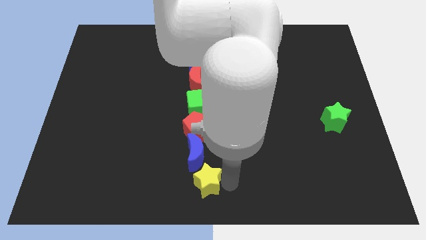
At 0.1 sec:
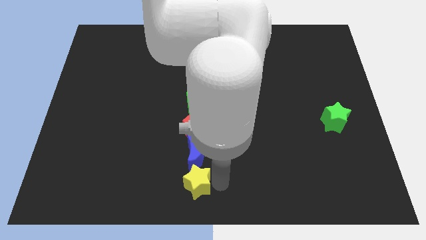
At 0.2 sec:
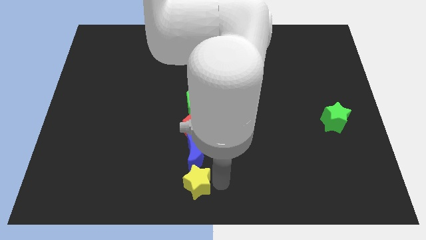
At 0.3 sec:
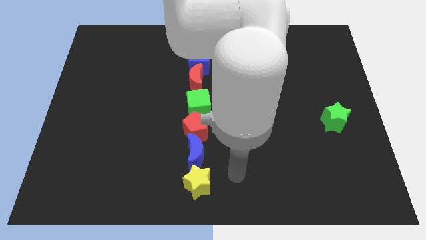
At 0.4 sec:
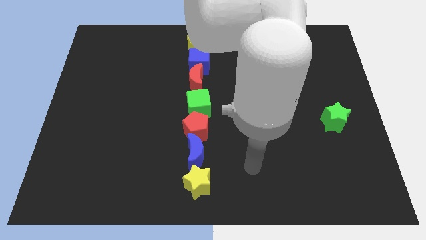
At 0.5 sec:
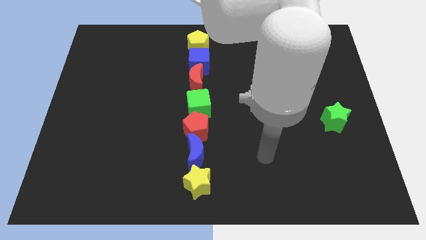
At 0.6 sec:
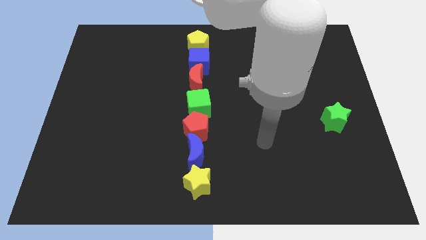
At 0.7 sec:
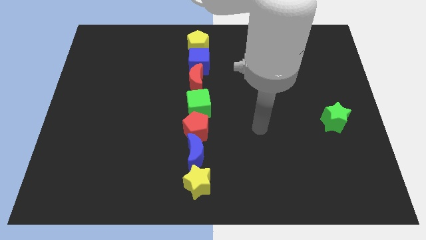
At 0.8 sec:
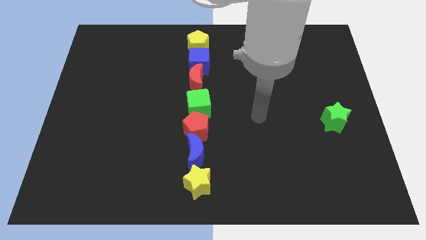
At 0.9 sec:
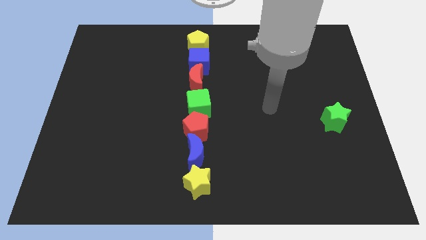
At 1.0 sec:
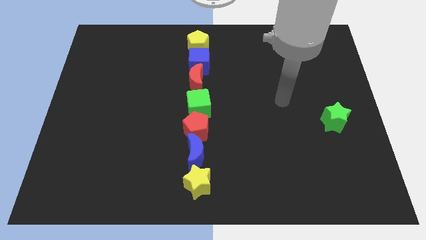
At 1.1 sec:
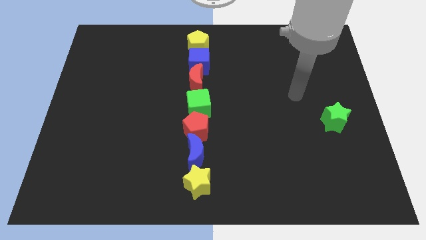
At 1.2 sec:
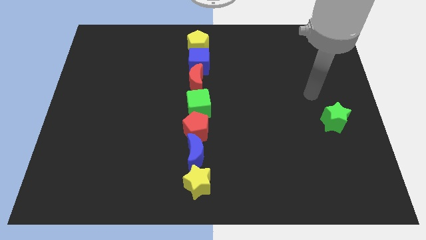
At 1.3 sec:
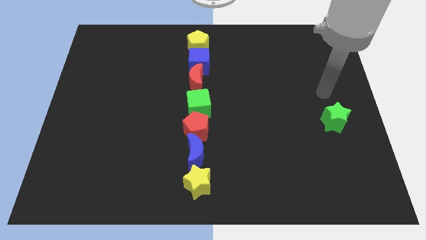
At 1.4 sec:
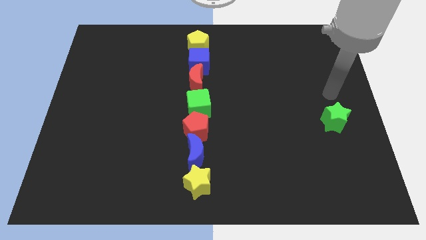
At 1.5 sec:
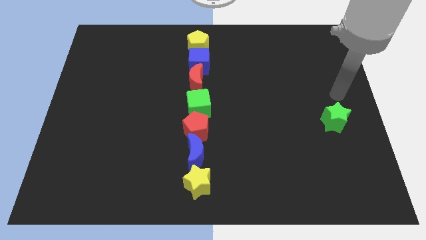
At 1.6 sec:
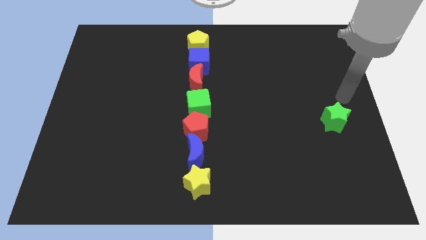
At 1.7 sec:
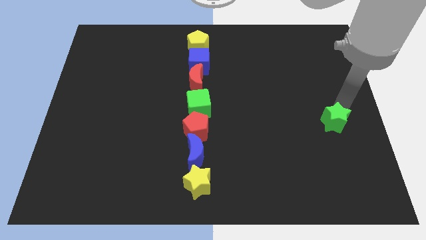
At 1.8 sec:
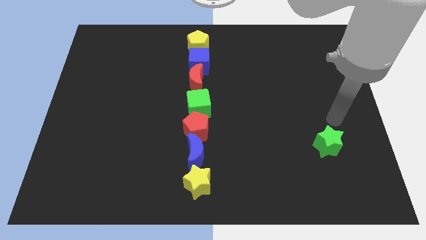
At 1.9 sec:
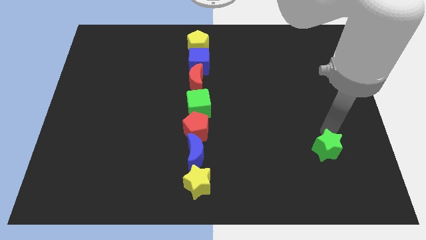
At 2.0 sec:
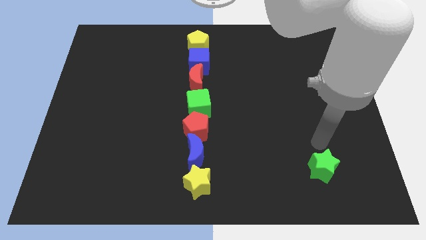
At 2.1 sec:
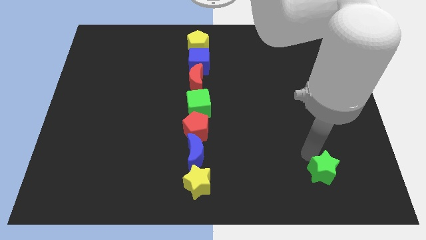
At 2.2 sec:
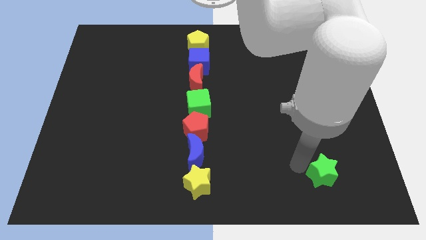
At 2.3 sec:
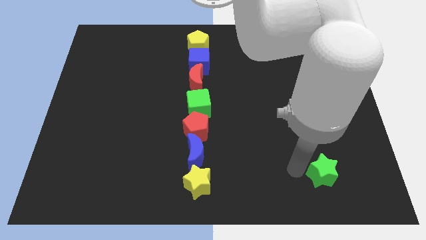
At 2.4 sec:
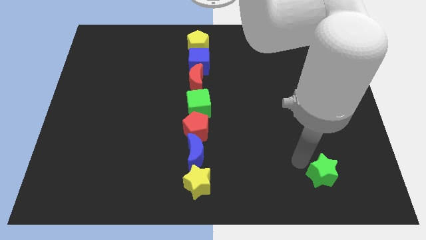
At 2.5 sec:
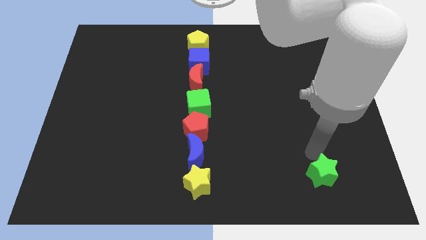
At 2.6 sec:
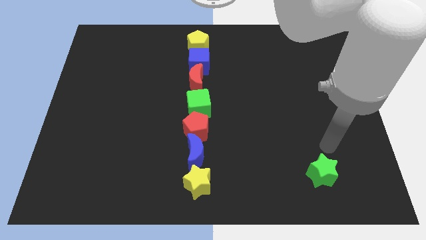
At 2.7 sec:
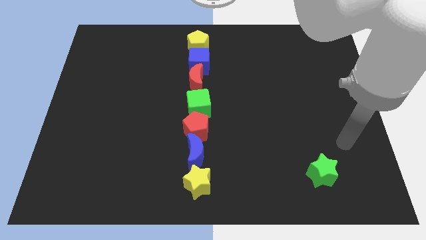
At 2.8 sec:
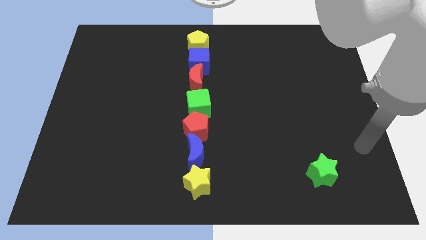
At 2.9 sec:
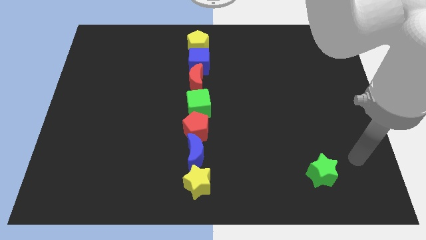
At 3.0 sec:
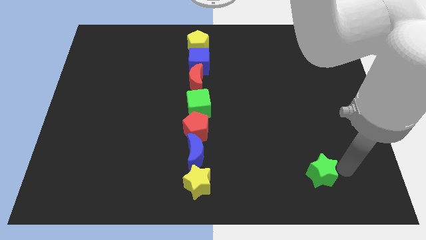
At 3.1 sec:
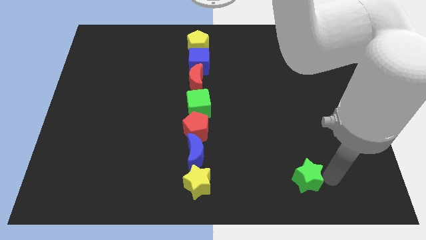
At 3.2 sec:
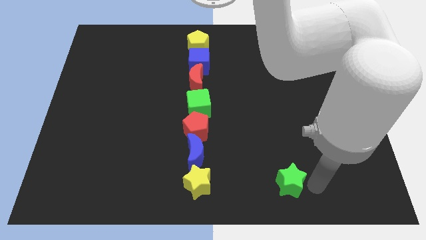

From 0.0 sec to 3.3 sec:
move the green star towards the left side

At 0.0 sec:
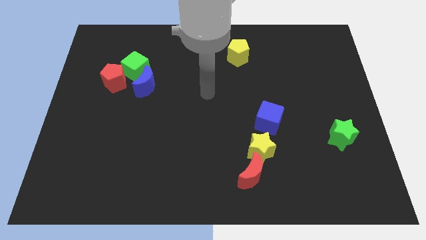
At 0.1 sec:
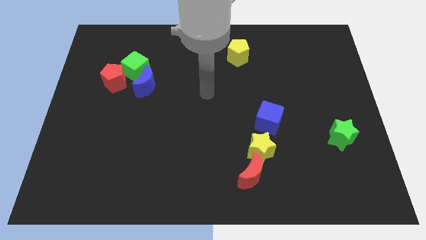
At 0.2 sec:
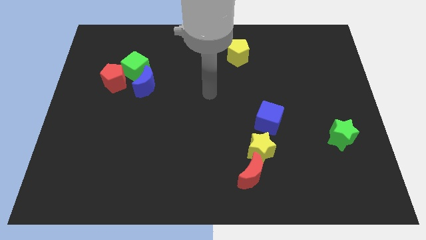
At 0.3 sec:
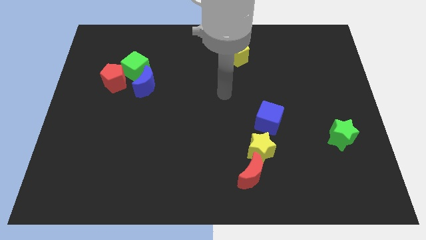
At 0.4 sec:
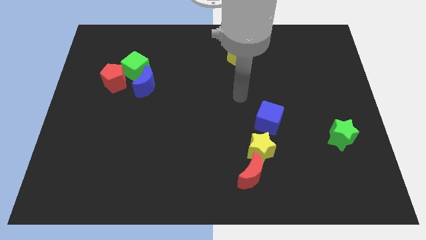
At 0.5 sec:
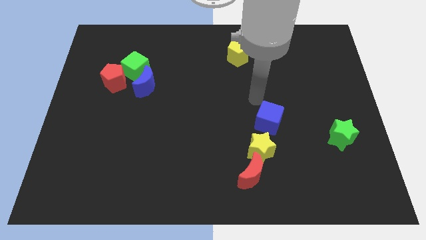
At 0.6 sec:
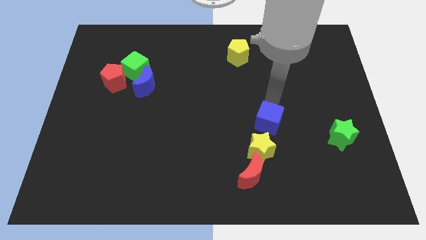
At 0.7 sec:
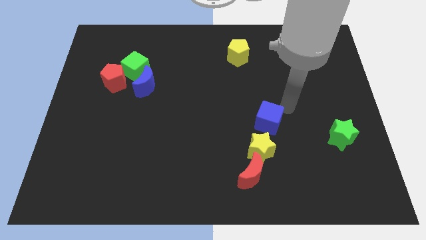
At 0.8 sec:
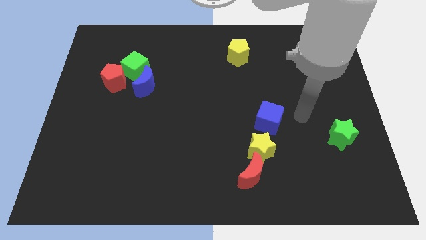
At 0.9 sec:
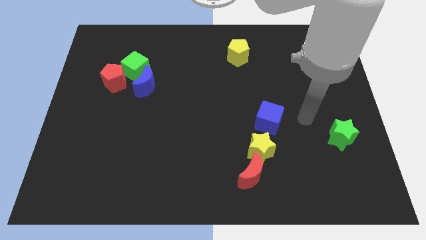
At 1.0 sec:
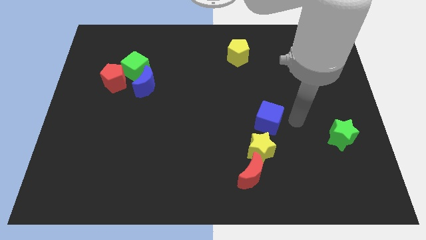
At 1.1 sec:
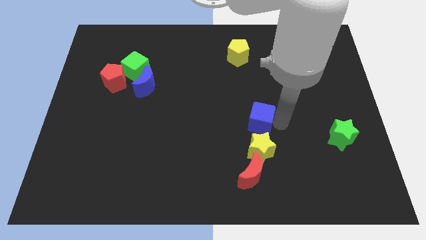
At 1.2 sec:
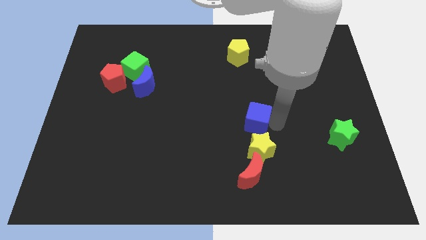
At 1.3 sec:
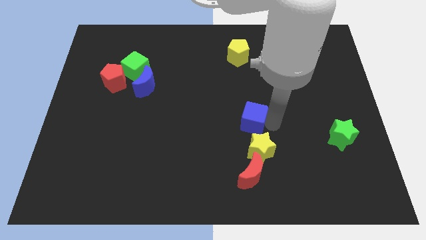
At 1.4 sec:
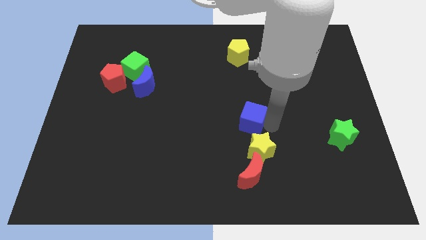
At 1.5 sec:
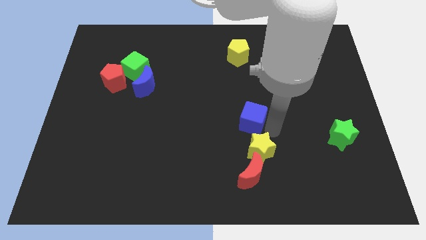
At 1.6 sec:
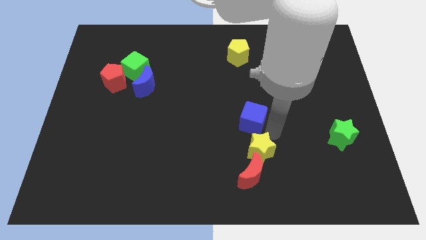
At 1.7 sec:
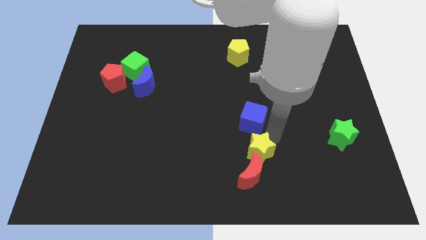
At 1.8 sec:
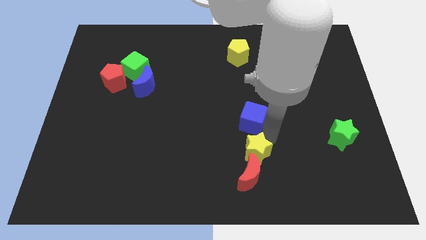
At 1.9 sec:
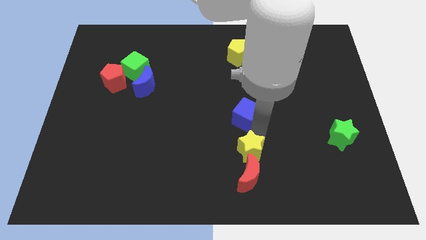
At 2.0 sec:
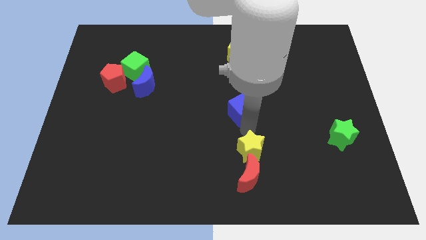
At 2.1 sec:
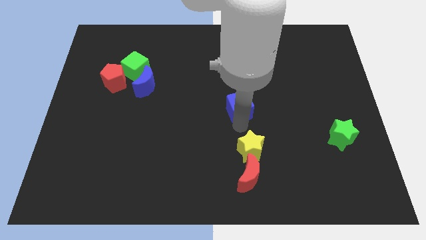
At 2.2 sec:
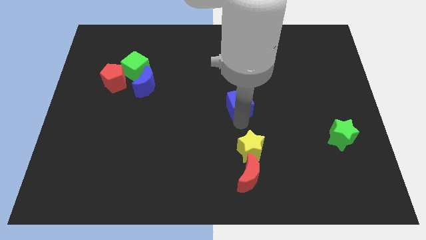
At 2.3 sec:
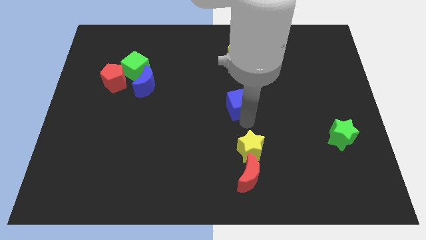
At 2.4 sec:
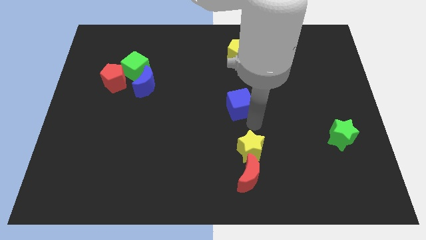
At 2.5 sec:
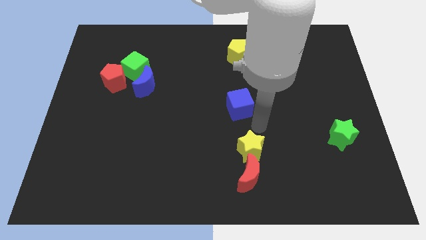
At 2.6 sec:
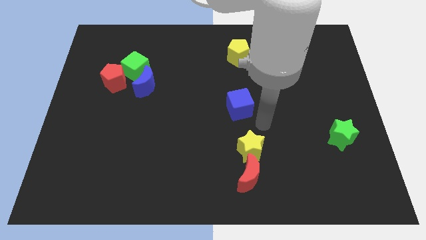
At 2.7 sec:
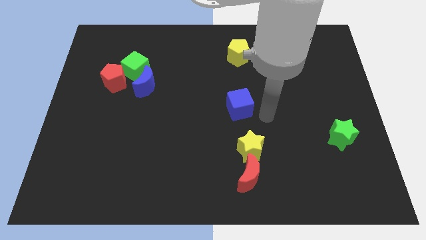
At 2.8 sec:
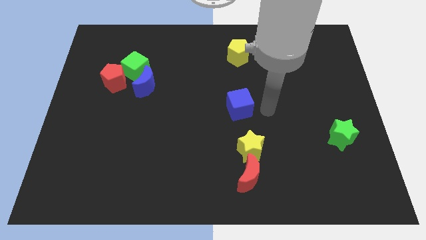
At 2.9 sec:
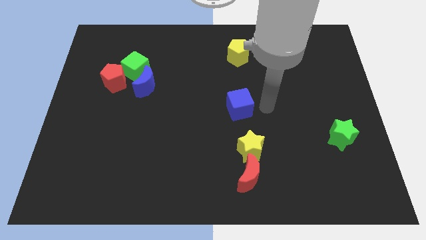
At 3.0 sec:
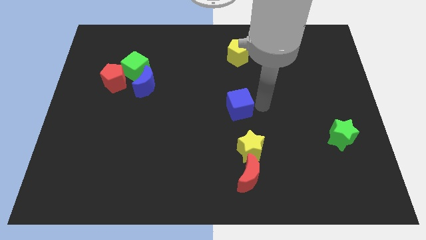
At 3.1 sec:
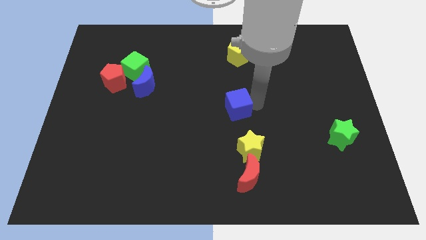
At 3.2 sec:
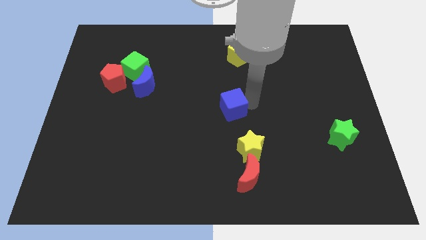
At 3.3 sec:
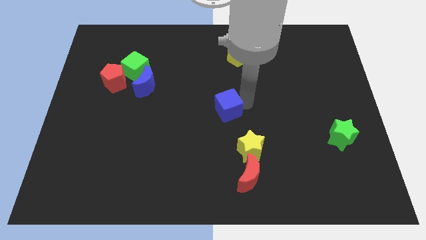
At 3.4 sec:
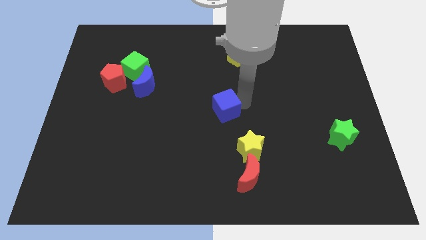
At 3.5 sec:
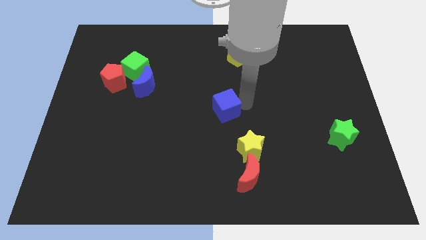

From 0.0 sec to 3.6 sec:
place blue cube to the center of the board

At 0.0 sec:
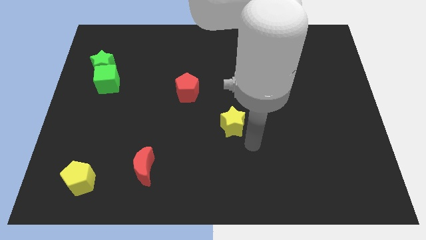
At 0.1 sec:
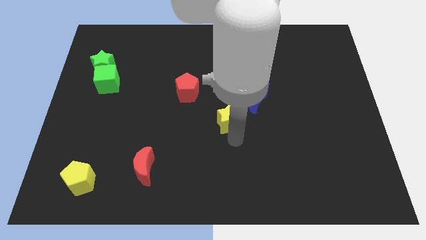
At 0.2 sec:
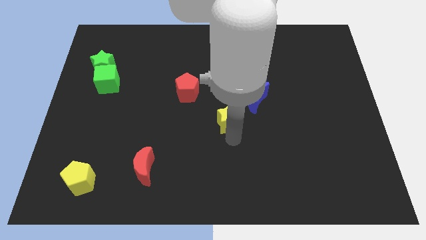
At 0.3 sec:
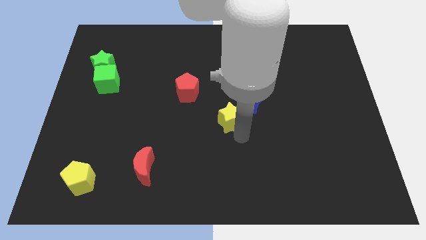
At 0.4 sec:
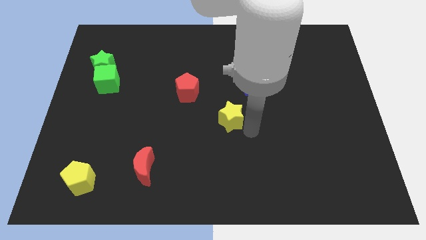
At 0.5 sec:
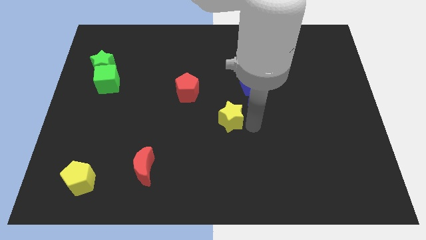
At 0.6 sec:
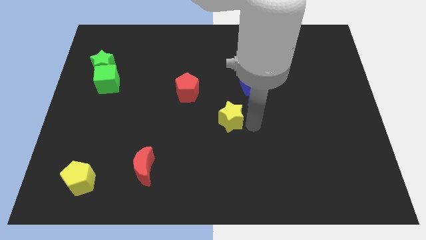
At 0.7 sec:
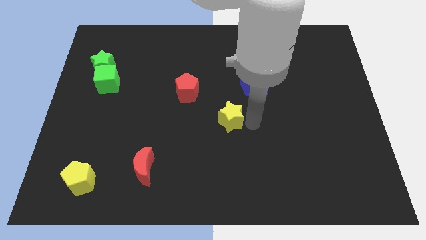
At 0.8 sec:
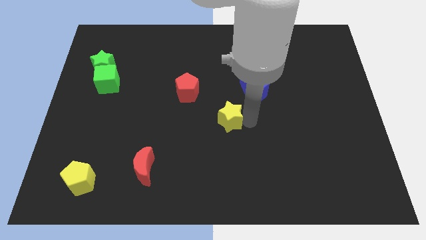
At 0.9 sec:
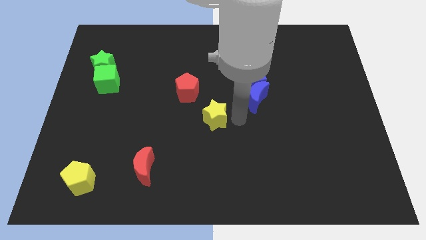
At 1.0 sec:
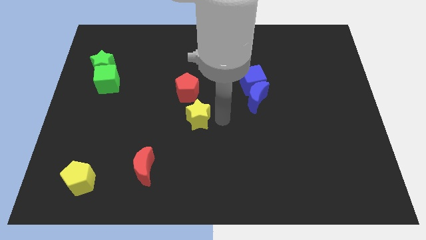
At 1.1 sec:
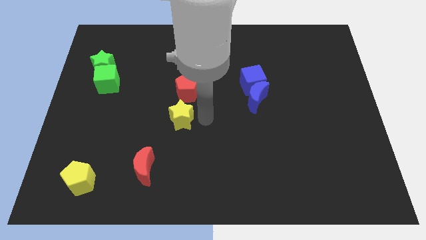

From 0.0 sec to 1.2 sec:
push the yellow star vertical to the red pentagon

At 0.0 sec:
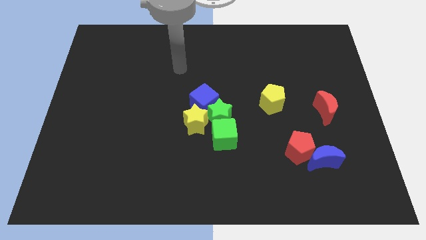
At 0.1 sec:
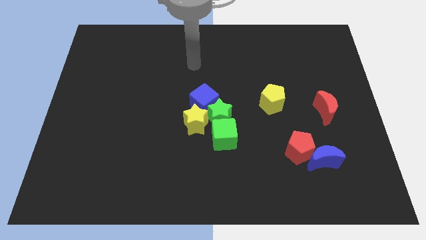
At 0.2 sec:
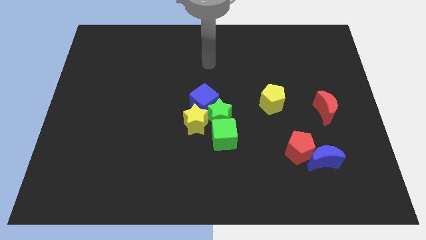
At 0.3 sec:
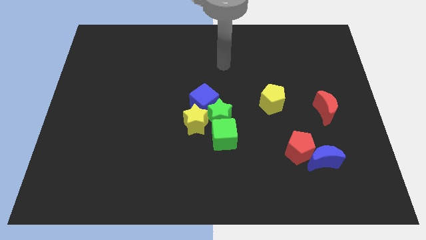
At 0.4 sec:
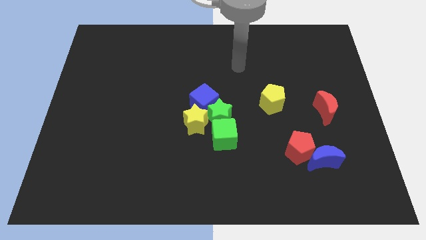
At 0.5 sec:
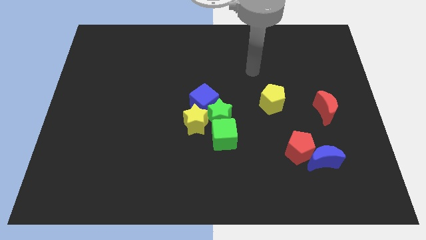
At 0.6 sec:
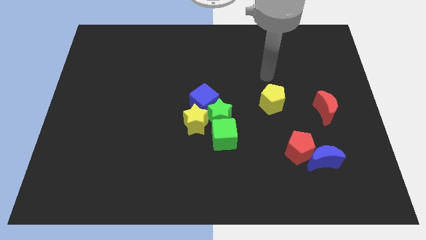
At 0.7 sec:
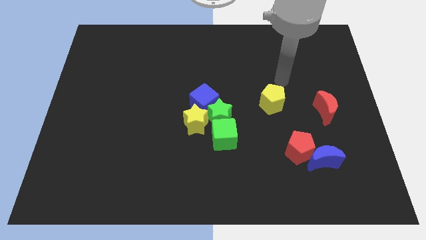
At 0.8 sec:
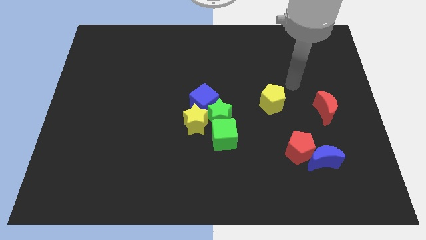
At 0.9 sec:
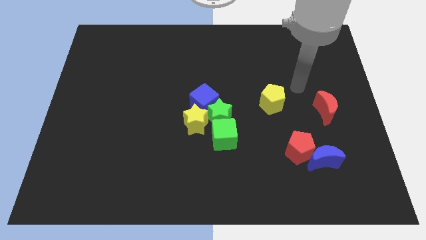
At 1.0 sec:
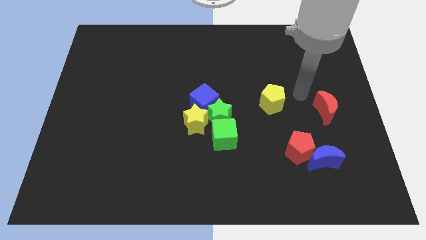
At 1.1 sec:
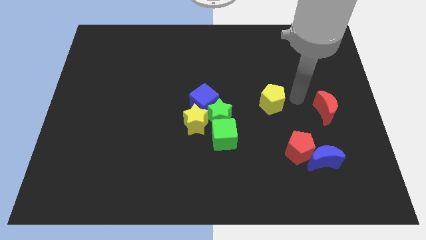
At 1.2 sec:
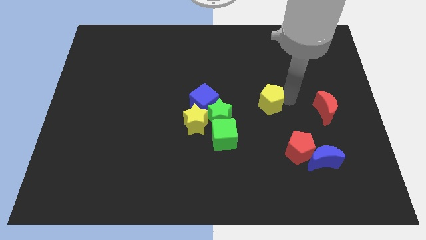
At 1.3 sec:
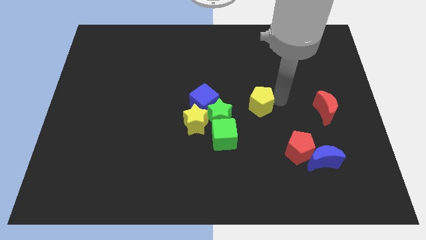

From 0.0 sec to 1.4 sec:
point your arm right to yellow pentagon
